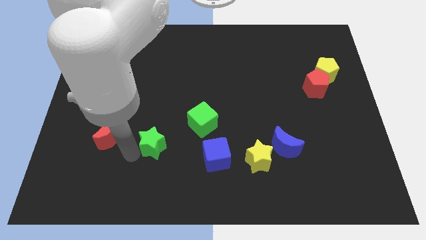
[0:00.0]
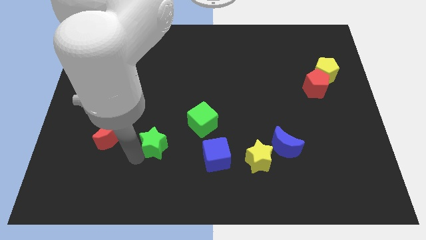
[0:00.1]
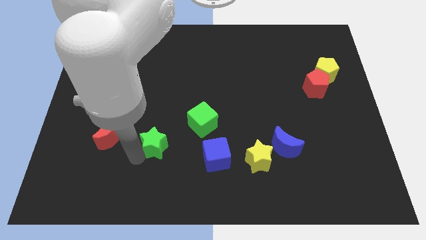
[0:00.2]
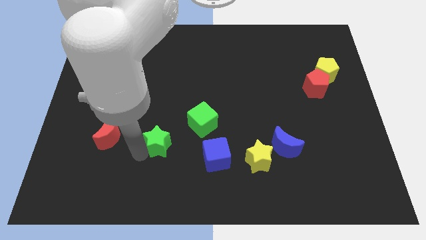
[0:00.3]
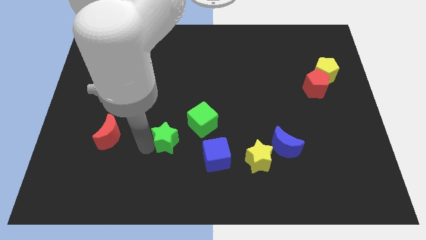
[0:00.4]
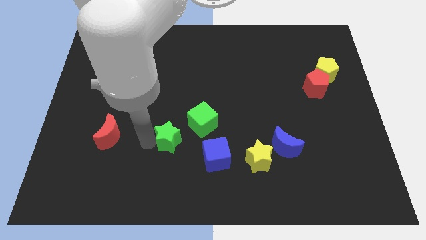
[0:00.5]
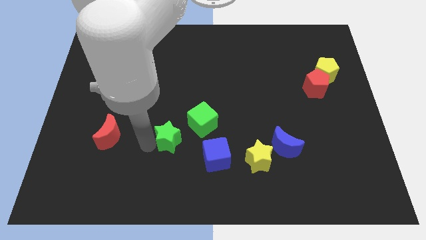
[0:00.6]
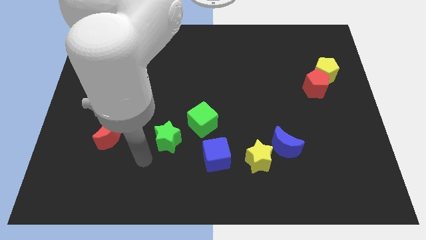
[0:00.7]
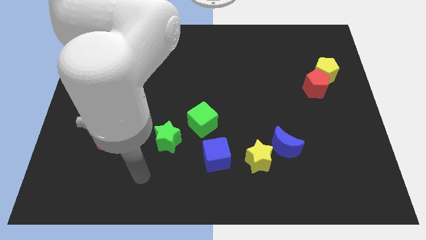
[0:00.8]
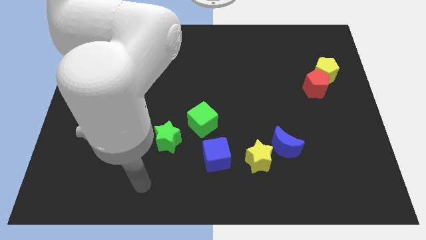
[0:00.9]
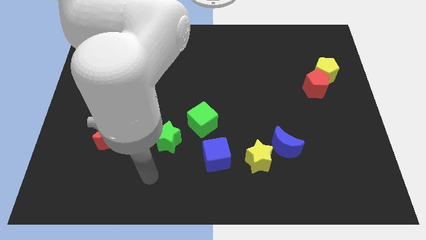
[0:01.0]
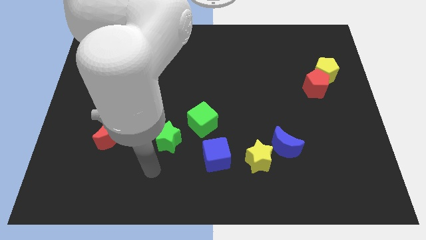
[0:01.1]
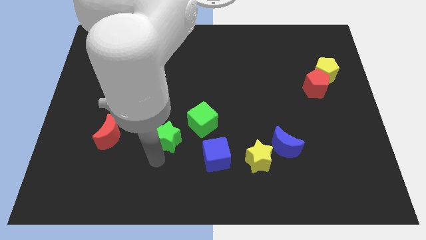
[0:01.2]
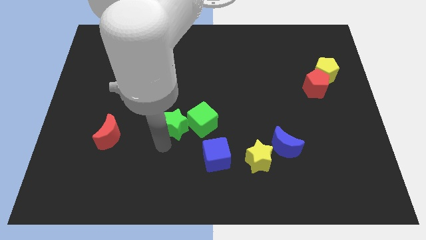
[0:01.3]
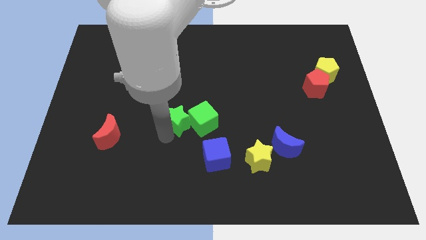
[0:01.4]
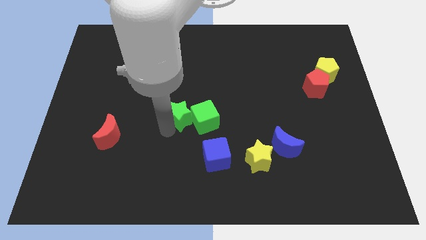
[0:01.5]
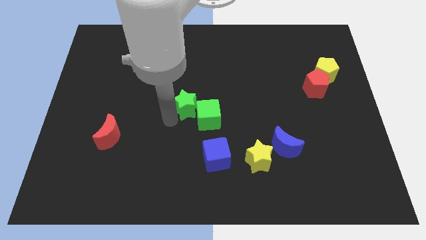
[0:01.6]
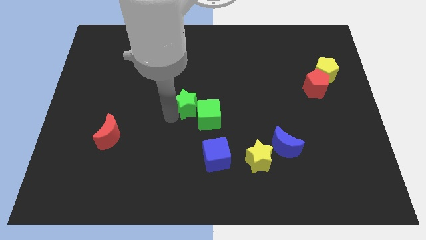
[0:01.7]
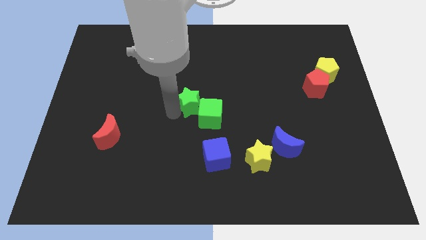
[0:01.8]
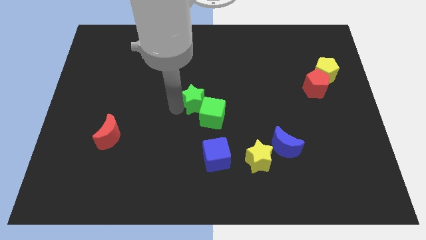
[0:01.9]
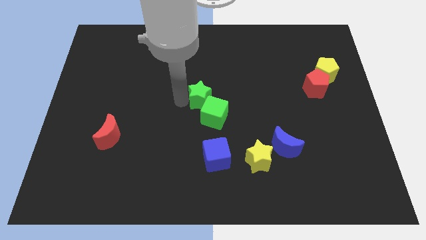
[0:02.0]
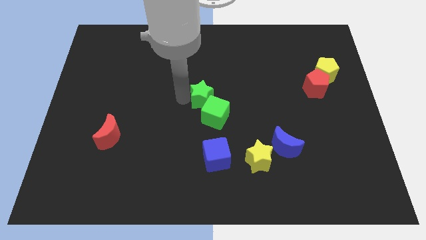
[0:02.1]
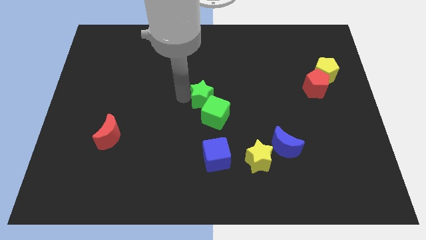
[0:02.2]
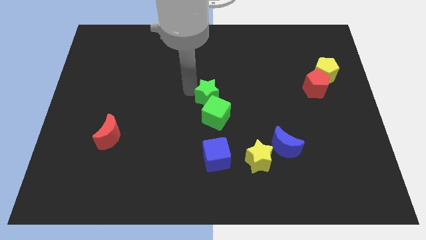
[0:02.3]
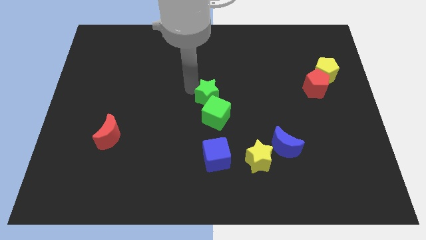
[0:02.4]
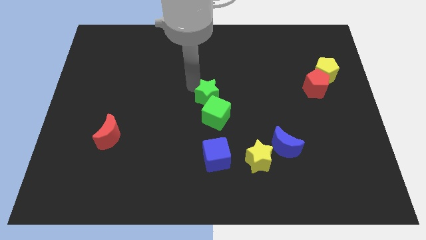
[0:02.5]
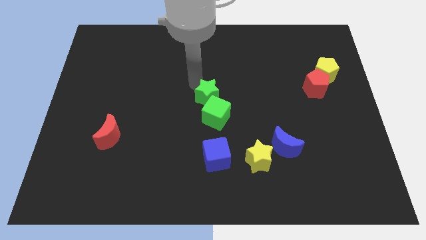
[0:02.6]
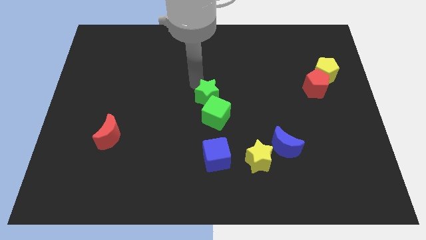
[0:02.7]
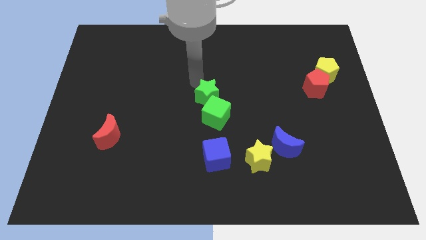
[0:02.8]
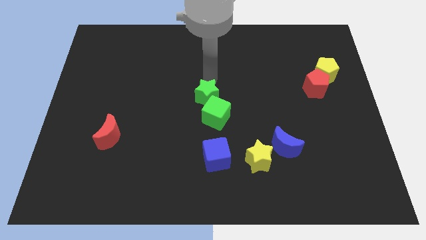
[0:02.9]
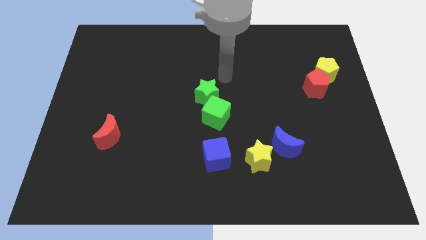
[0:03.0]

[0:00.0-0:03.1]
place the green star on top of green cube

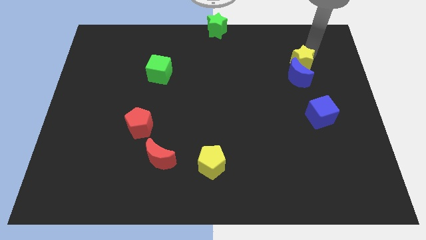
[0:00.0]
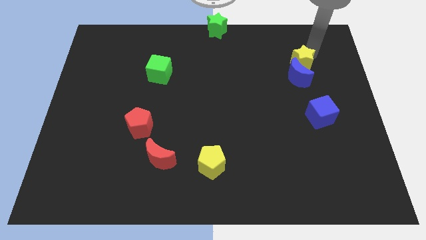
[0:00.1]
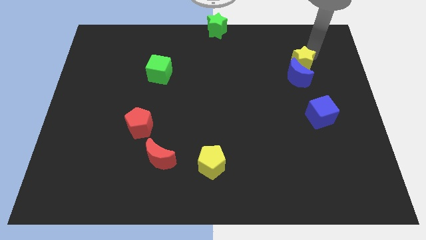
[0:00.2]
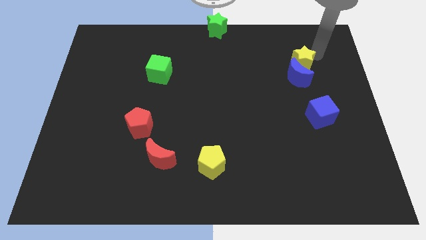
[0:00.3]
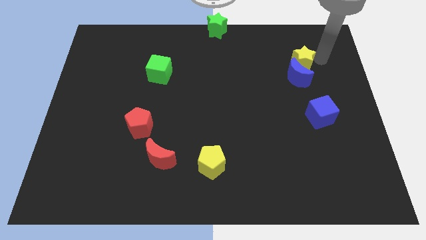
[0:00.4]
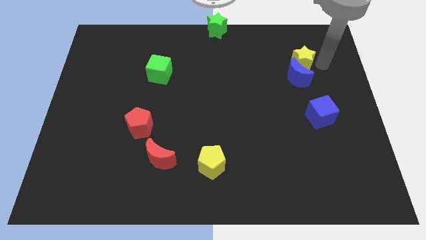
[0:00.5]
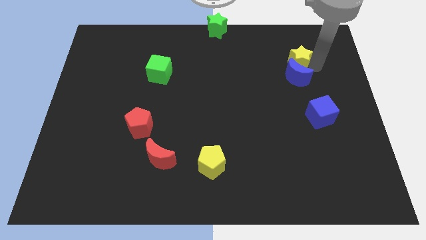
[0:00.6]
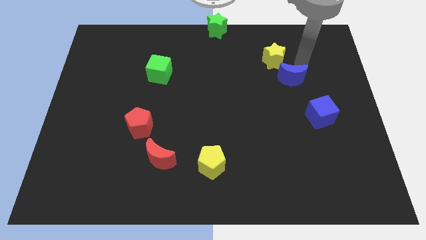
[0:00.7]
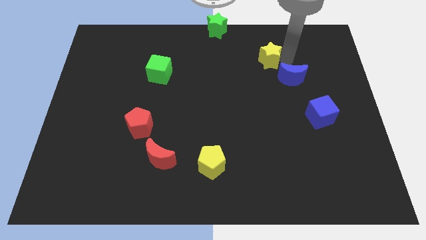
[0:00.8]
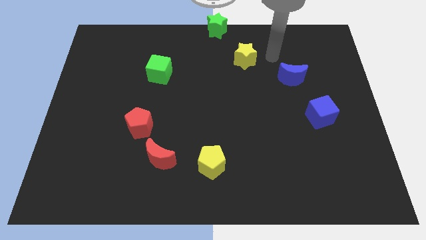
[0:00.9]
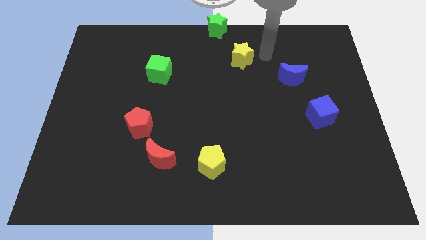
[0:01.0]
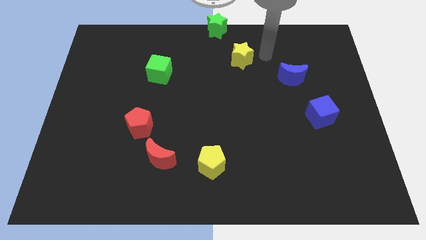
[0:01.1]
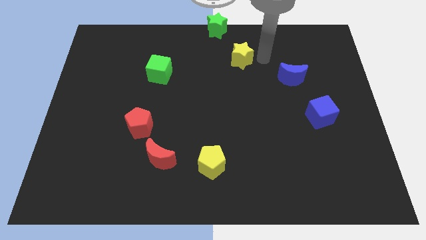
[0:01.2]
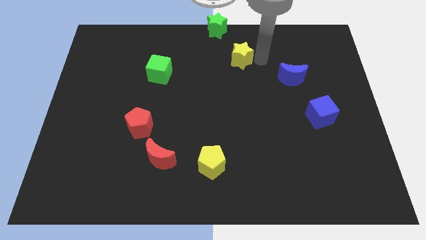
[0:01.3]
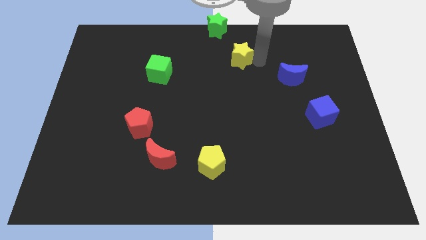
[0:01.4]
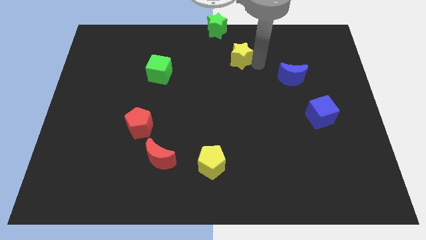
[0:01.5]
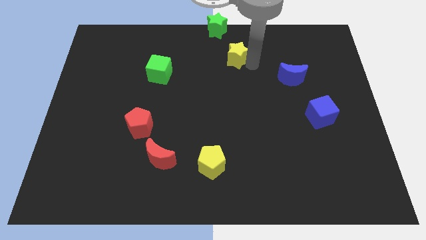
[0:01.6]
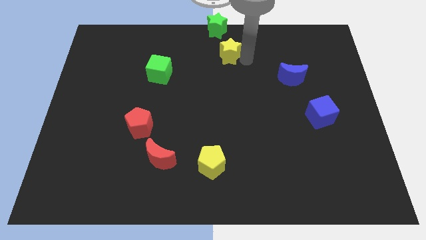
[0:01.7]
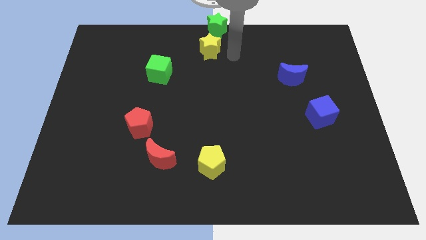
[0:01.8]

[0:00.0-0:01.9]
move yellow star below green star

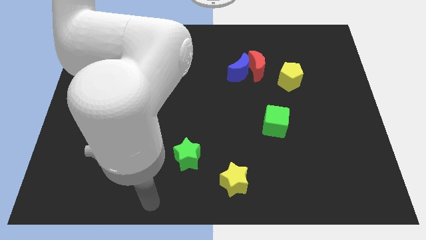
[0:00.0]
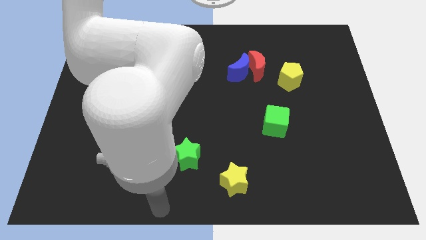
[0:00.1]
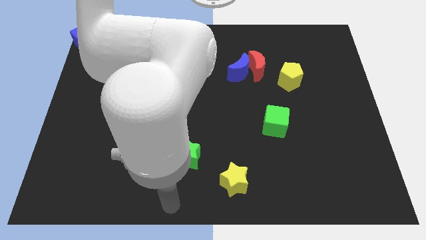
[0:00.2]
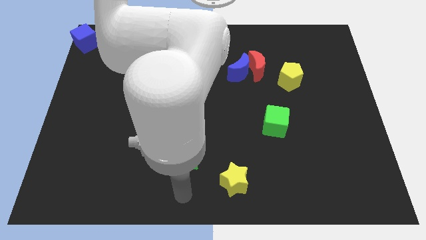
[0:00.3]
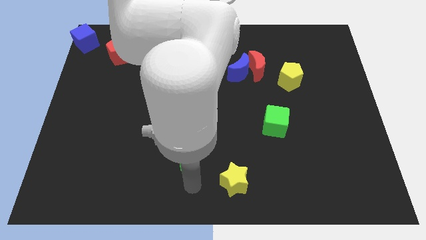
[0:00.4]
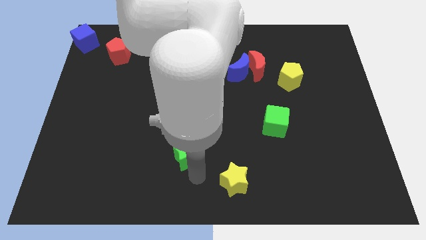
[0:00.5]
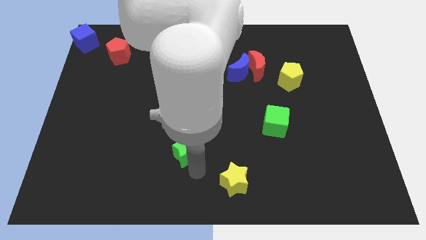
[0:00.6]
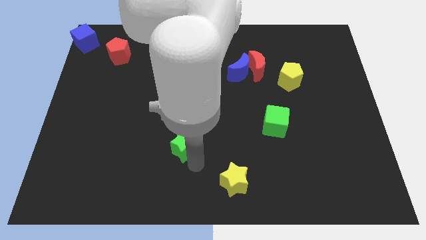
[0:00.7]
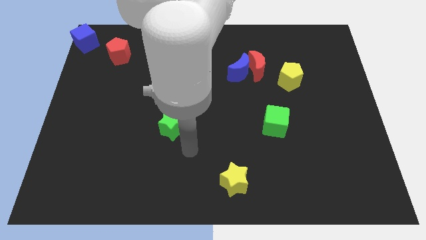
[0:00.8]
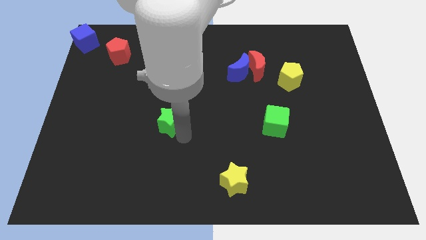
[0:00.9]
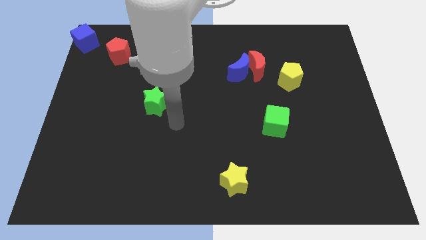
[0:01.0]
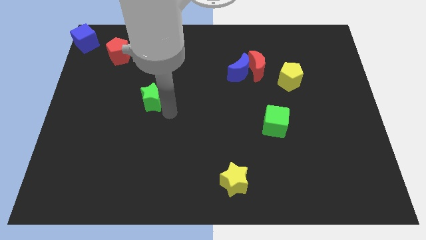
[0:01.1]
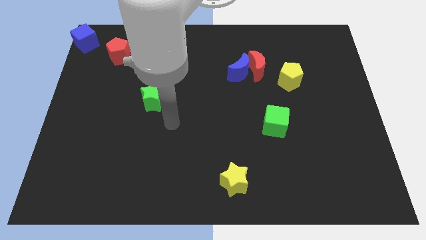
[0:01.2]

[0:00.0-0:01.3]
take the green star towards the red pentagon

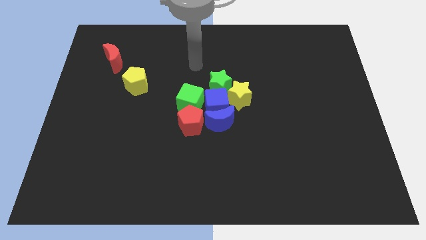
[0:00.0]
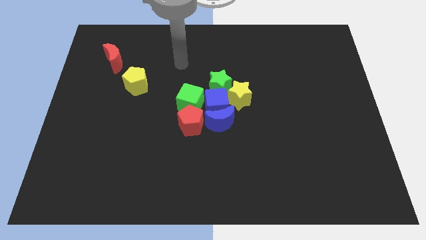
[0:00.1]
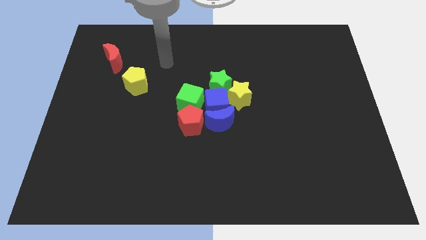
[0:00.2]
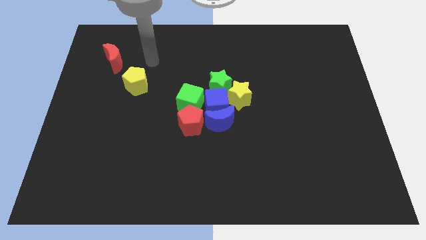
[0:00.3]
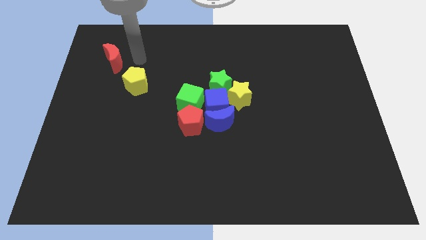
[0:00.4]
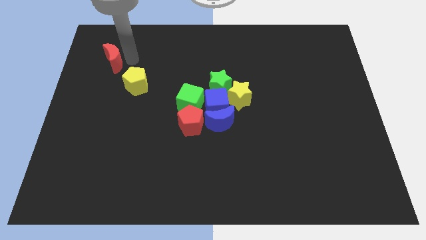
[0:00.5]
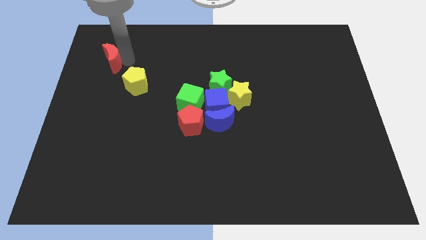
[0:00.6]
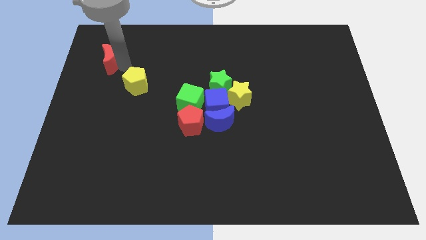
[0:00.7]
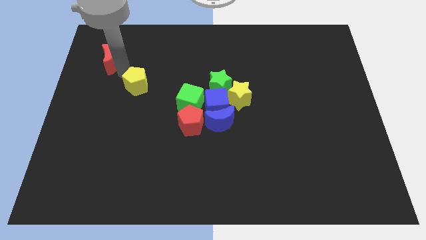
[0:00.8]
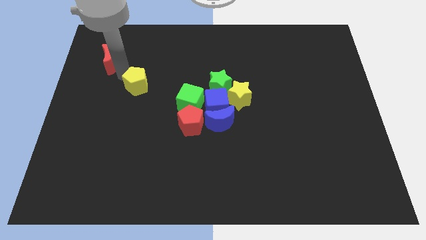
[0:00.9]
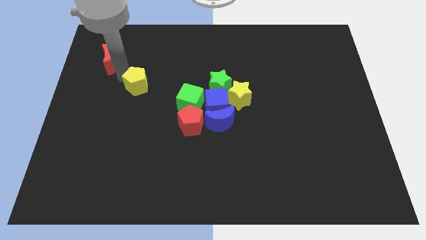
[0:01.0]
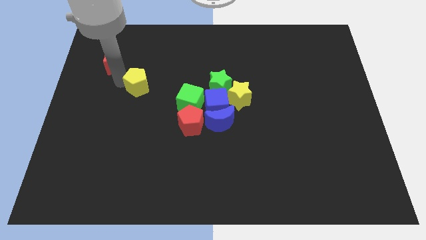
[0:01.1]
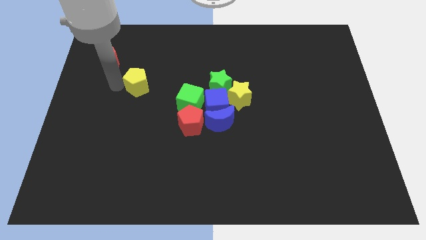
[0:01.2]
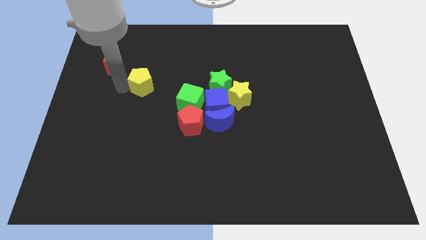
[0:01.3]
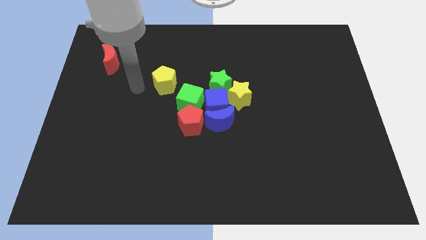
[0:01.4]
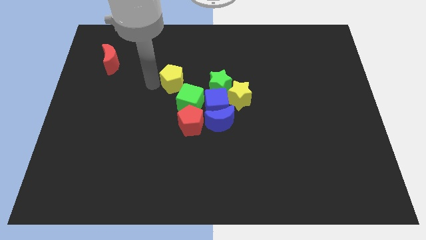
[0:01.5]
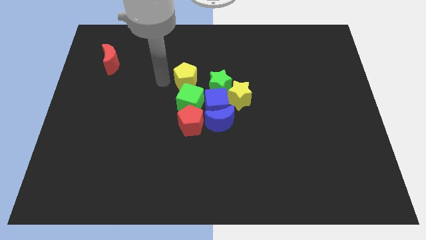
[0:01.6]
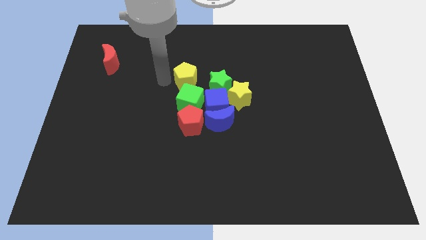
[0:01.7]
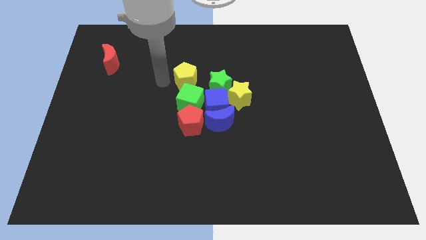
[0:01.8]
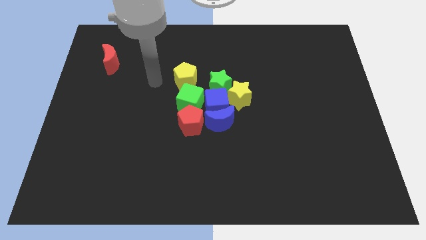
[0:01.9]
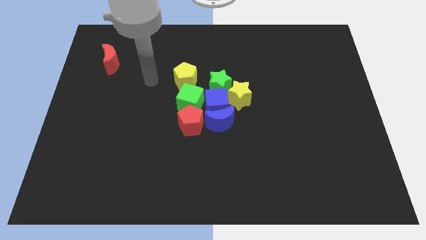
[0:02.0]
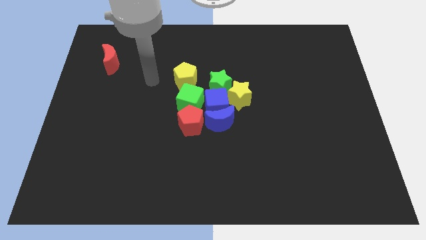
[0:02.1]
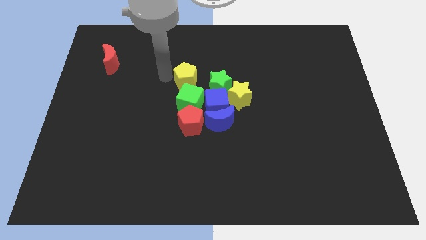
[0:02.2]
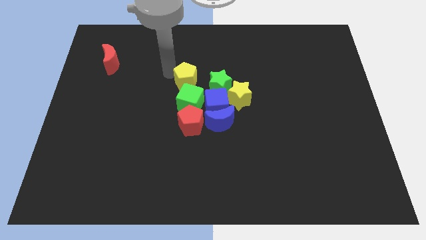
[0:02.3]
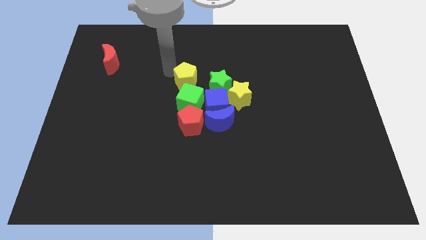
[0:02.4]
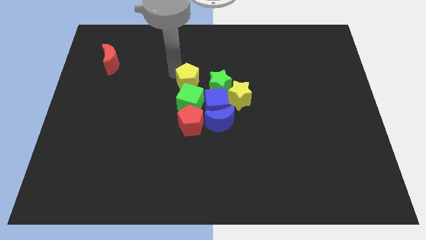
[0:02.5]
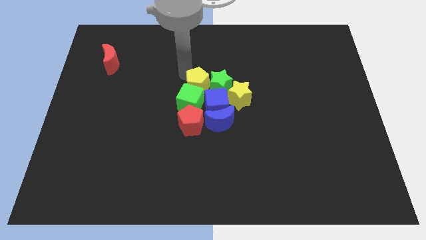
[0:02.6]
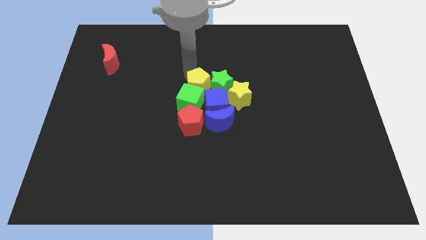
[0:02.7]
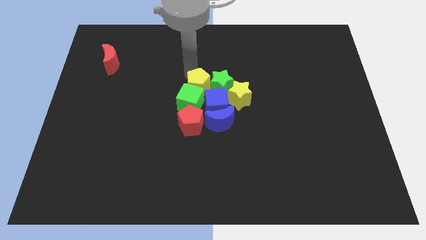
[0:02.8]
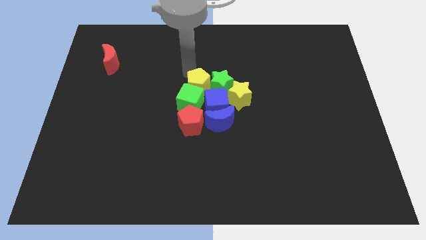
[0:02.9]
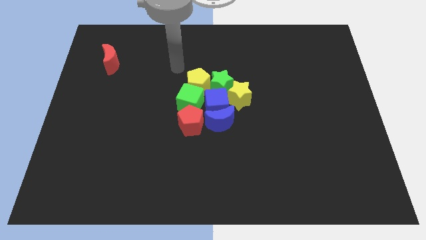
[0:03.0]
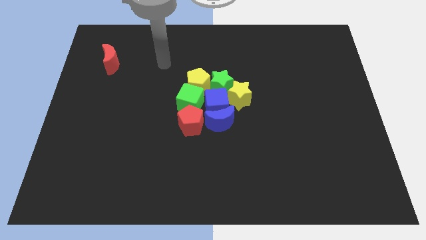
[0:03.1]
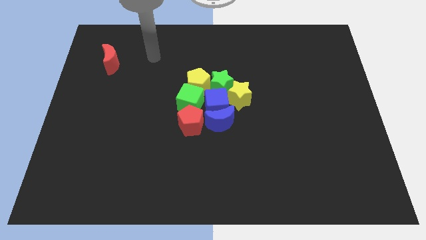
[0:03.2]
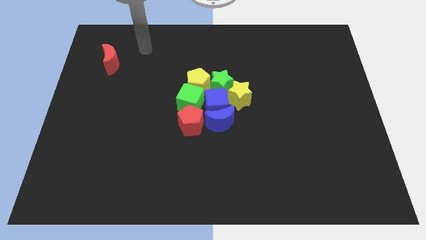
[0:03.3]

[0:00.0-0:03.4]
add the yellow pentagon to the group of blocks which are at the center of the board
